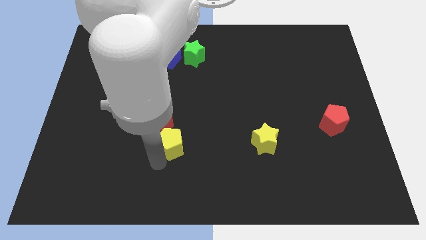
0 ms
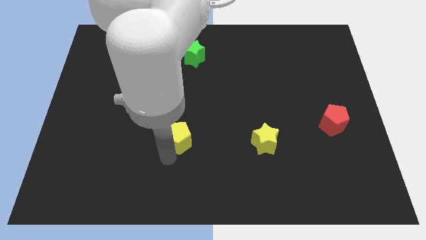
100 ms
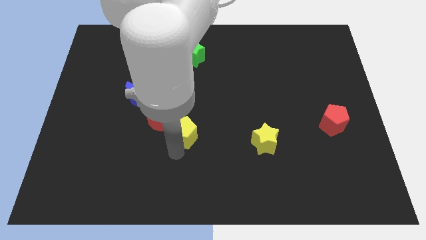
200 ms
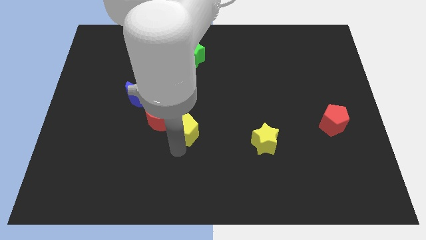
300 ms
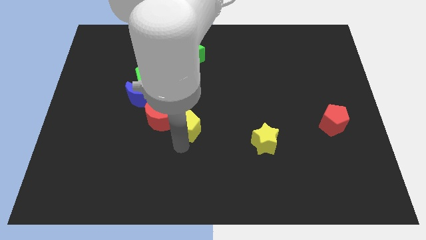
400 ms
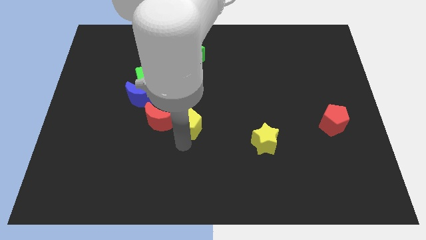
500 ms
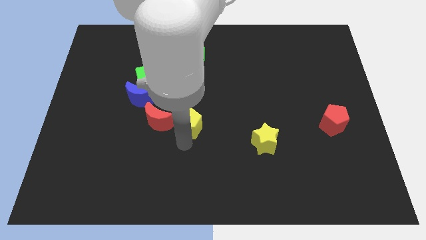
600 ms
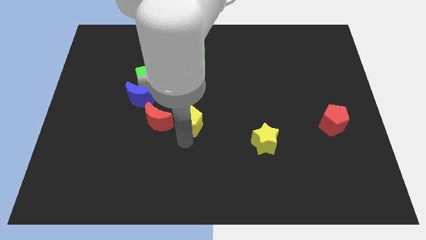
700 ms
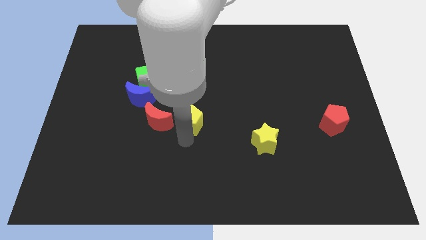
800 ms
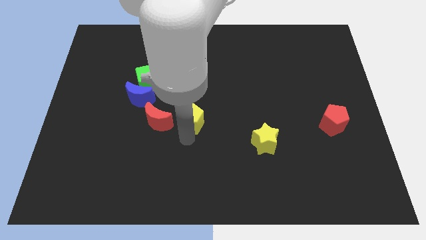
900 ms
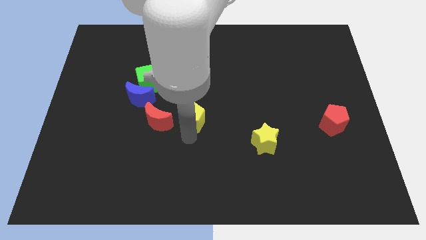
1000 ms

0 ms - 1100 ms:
place the yellow pentagon right to the red moon

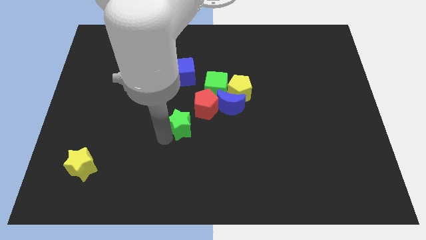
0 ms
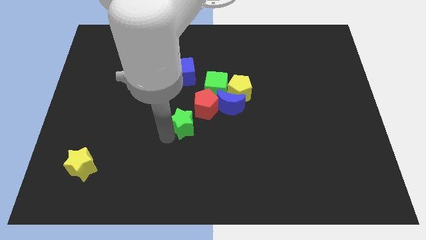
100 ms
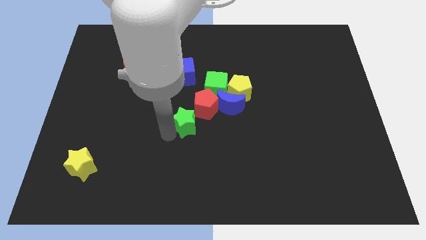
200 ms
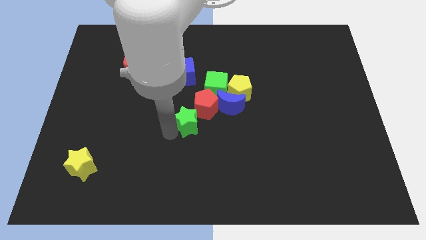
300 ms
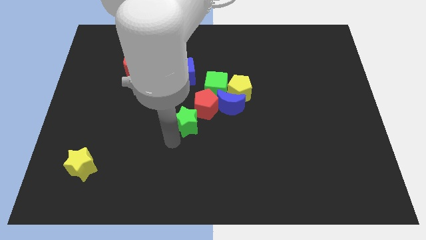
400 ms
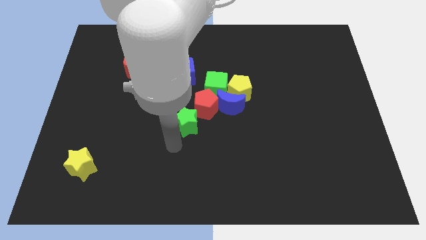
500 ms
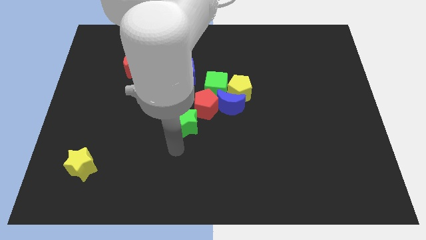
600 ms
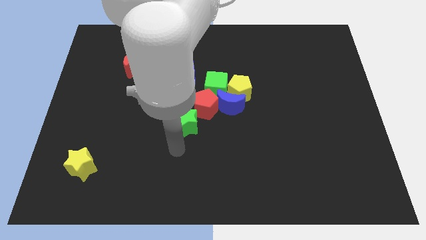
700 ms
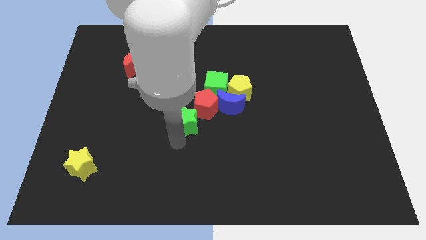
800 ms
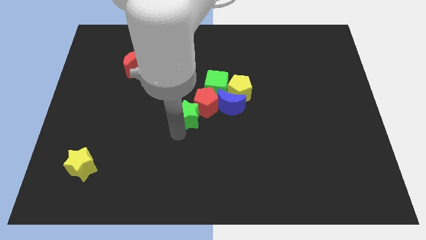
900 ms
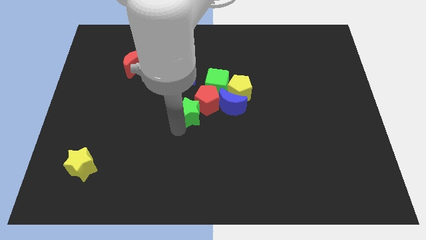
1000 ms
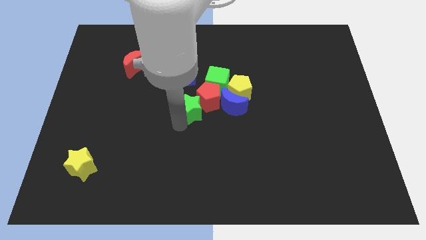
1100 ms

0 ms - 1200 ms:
push the green star into the red pentagon

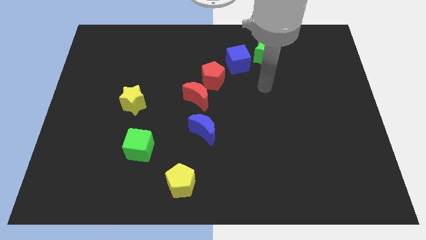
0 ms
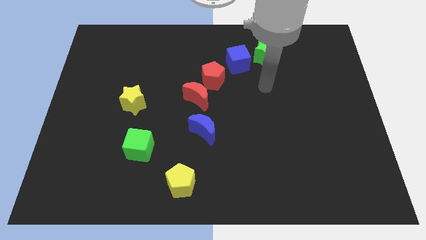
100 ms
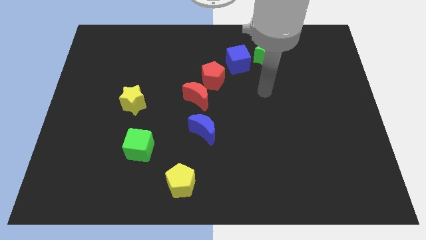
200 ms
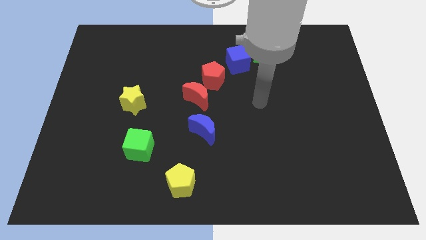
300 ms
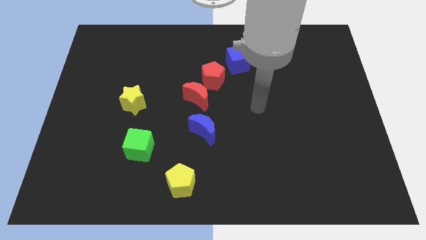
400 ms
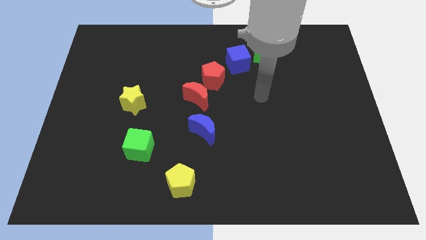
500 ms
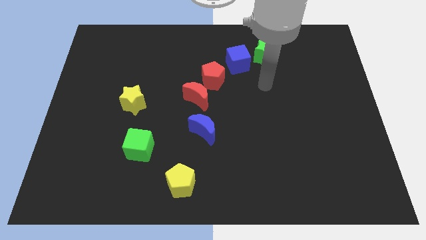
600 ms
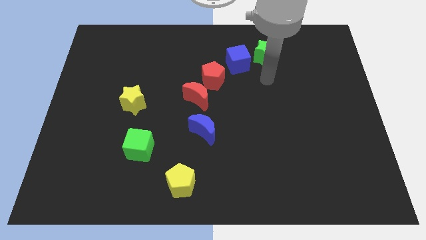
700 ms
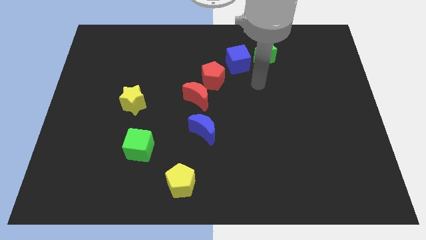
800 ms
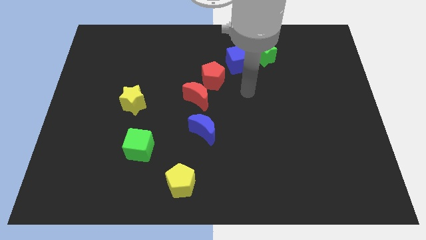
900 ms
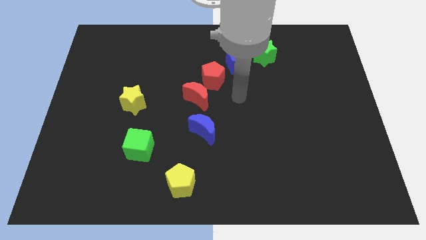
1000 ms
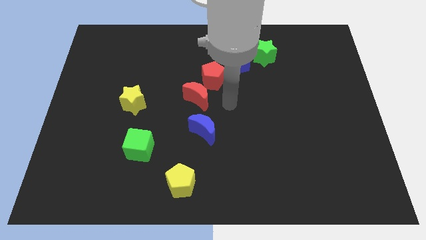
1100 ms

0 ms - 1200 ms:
move your arm to the right of the red crescent

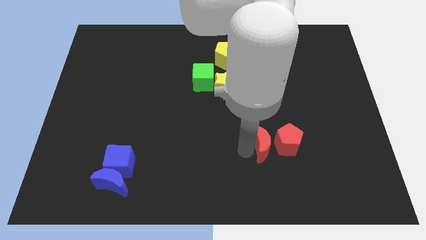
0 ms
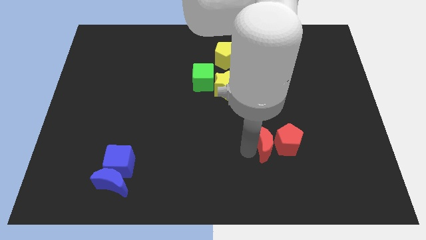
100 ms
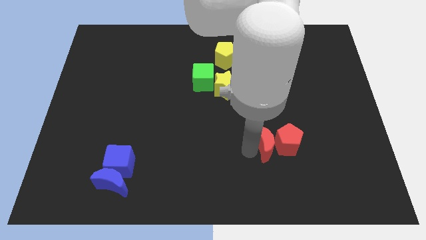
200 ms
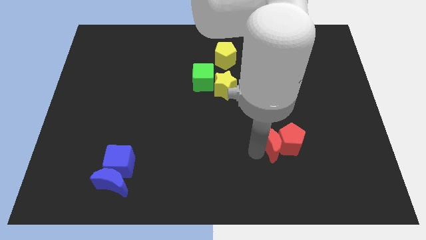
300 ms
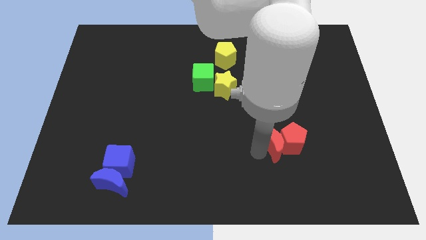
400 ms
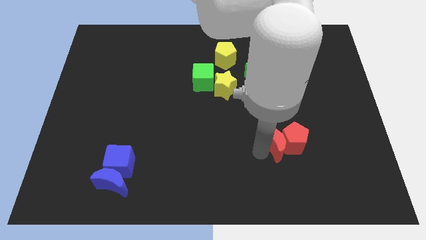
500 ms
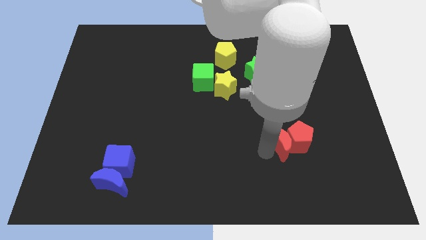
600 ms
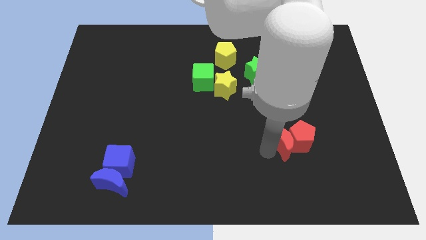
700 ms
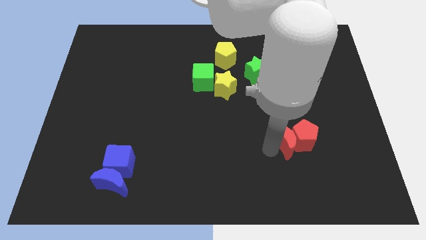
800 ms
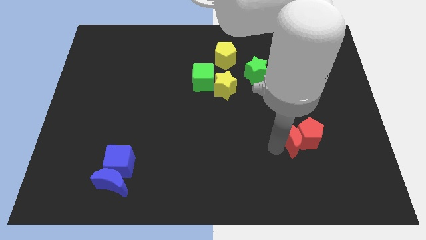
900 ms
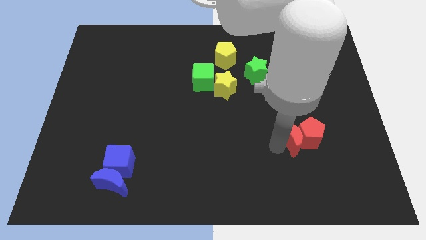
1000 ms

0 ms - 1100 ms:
push the red blocks to right side of the board

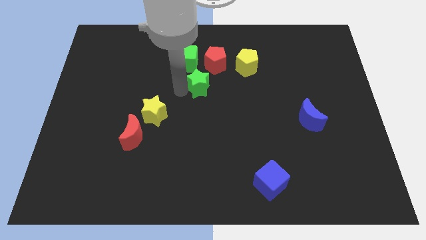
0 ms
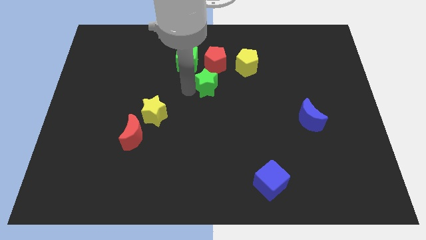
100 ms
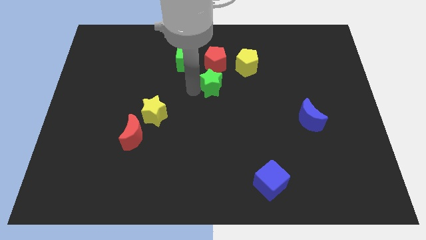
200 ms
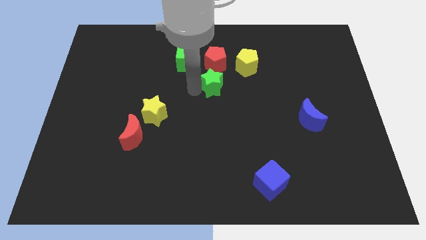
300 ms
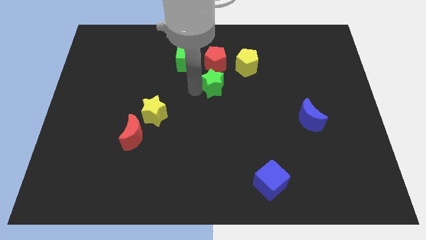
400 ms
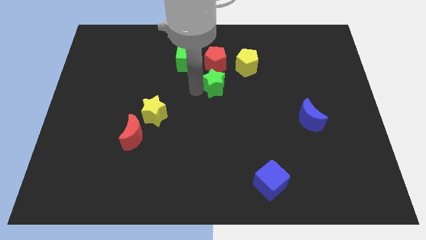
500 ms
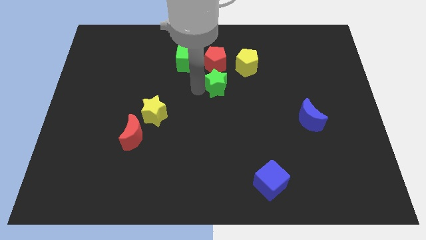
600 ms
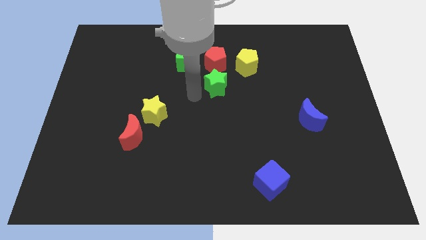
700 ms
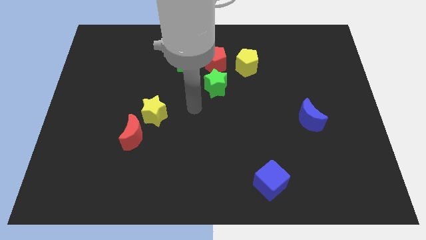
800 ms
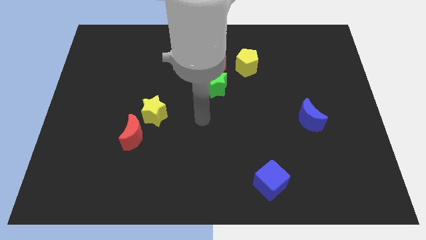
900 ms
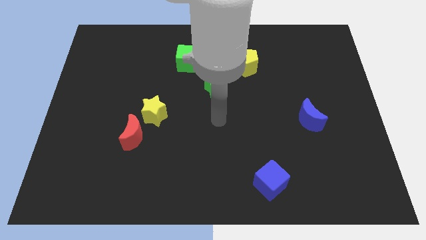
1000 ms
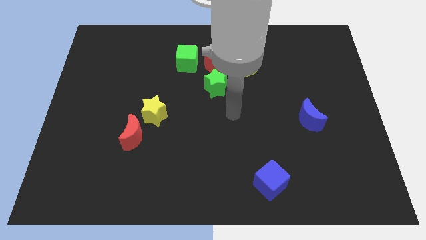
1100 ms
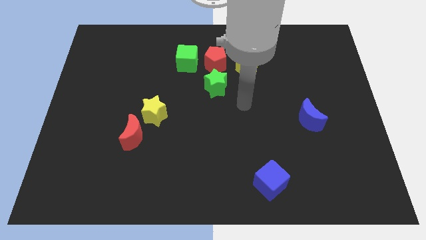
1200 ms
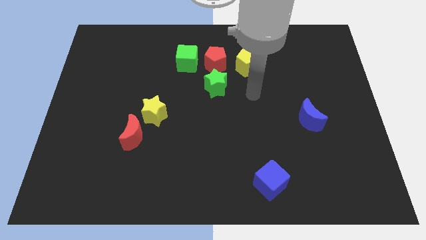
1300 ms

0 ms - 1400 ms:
move green star to the bottom of the red pentagon

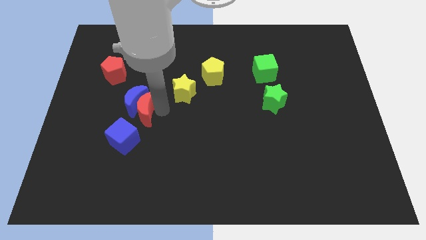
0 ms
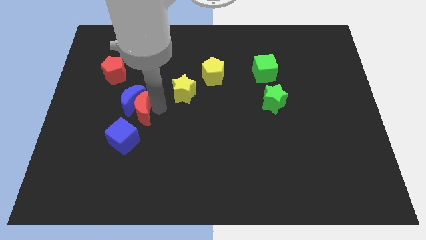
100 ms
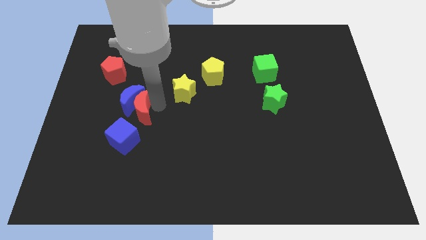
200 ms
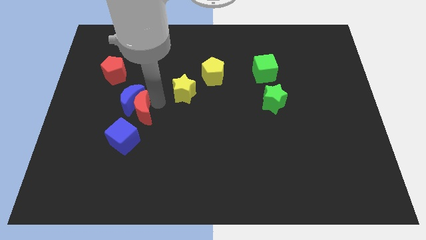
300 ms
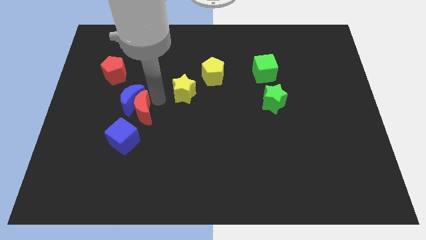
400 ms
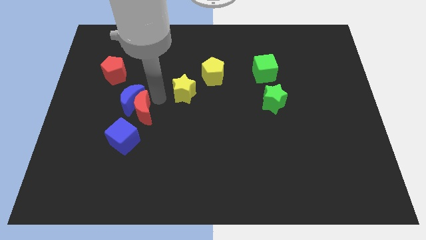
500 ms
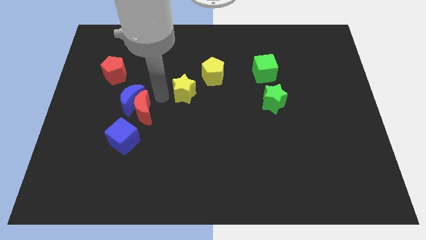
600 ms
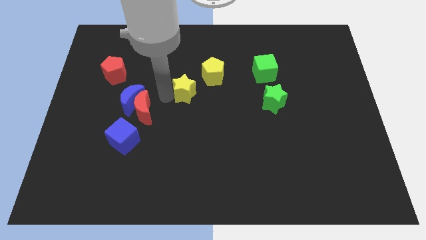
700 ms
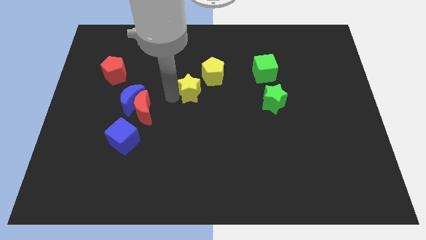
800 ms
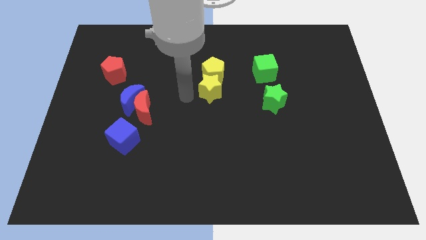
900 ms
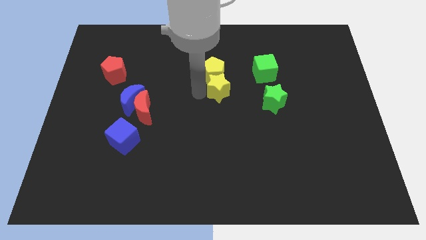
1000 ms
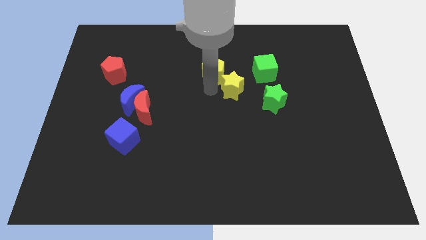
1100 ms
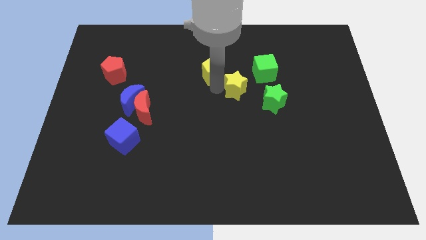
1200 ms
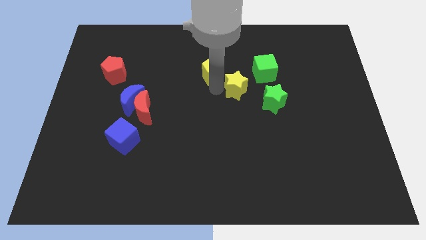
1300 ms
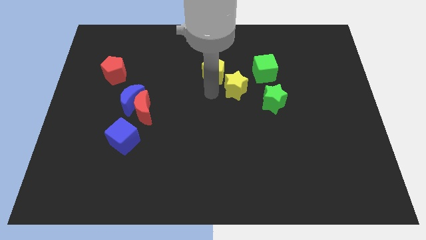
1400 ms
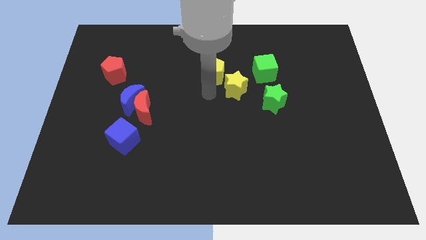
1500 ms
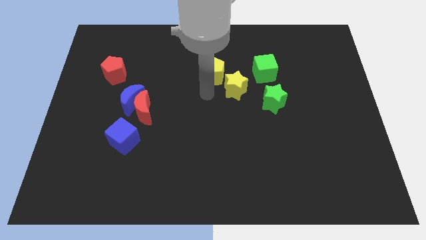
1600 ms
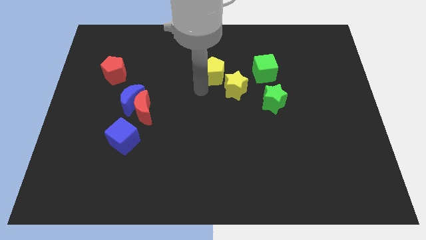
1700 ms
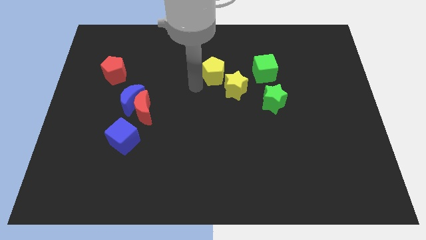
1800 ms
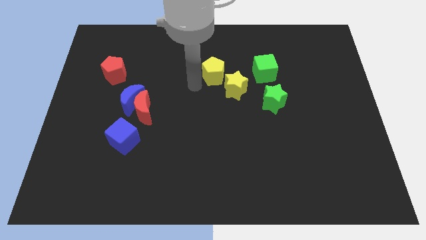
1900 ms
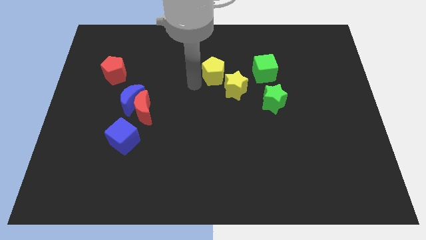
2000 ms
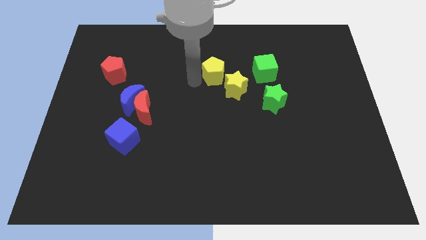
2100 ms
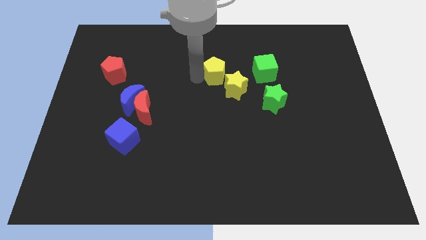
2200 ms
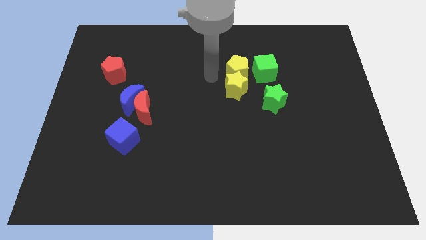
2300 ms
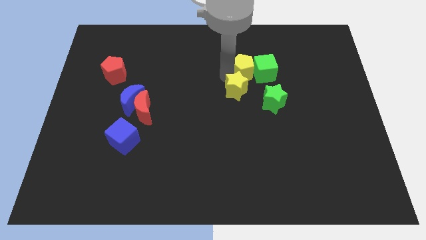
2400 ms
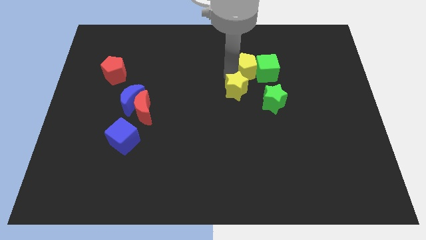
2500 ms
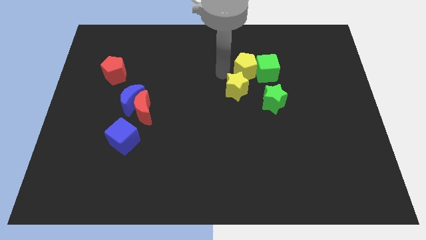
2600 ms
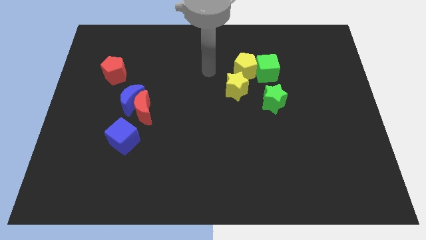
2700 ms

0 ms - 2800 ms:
push yellow pentagon into green cube
